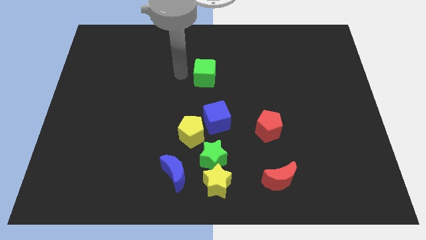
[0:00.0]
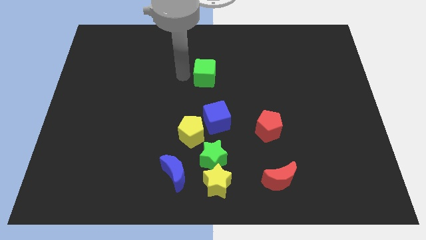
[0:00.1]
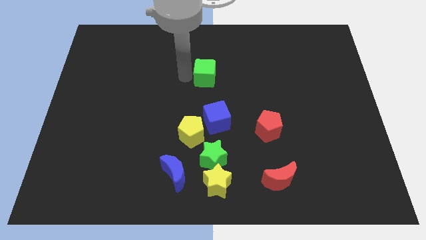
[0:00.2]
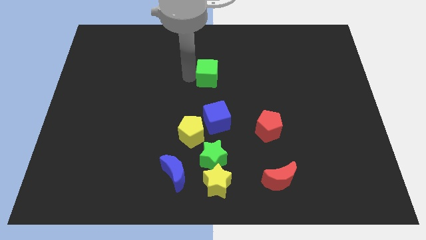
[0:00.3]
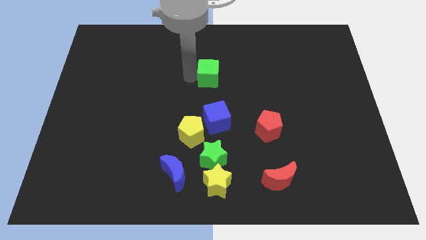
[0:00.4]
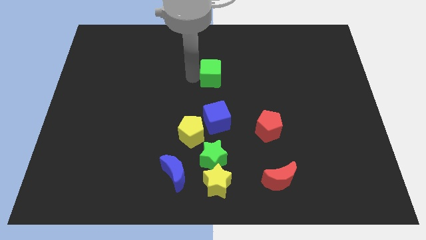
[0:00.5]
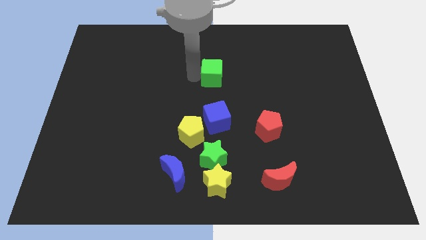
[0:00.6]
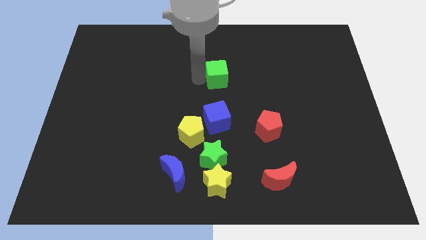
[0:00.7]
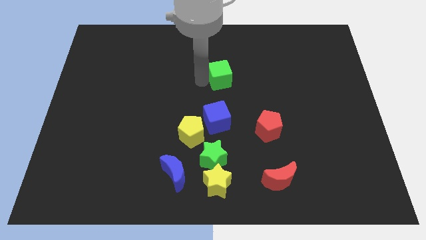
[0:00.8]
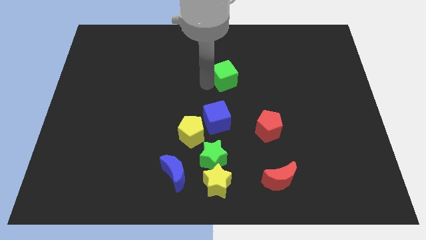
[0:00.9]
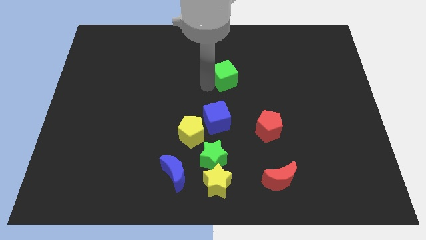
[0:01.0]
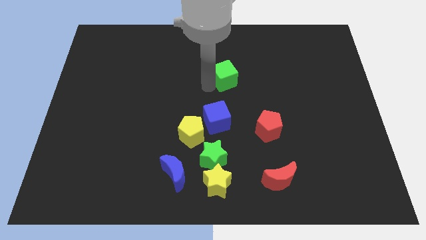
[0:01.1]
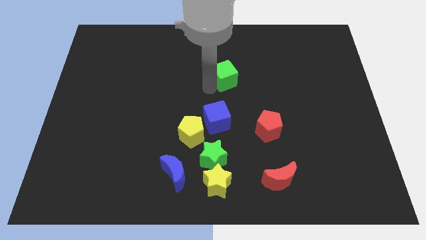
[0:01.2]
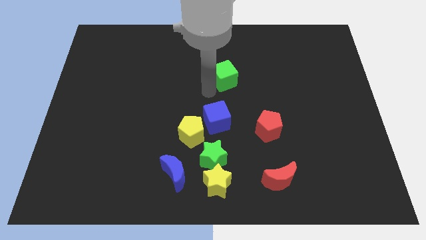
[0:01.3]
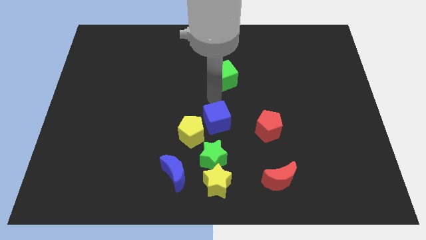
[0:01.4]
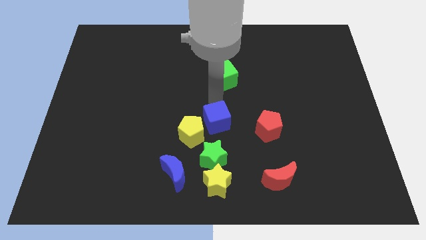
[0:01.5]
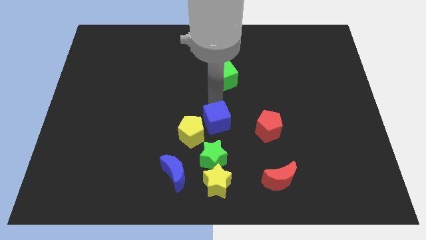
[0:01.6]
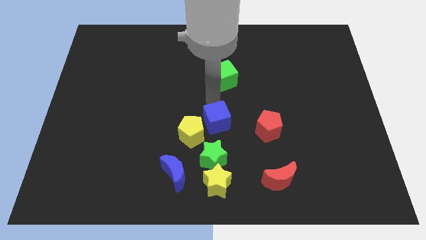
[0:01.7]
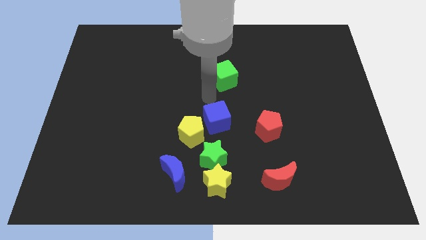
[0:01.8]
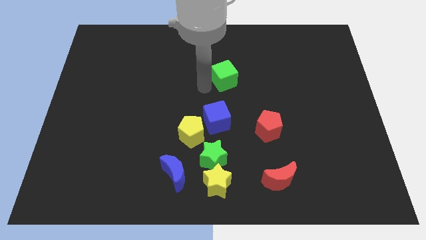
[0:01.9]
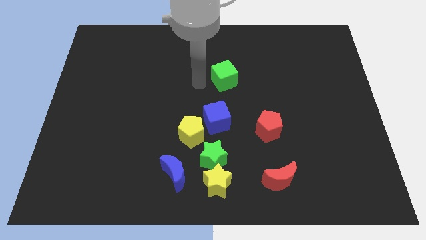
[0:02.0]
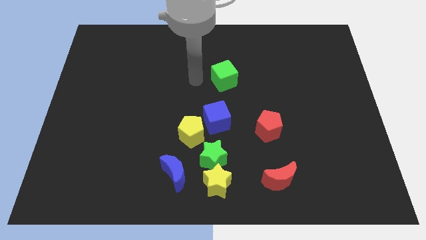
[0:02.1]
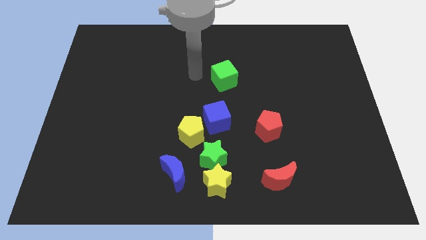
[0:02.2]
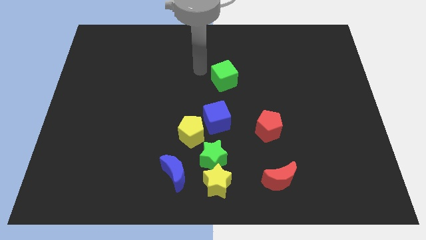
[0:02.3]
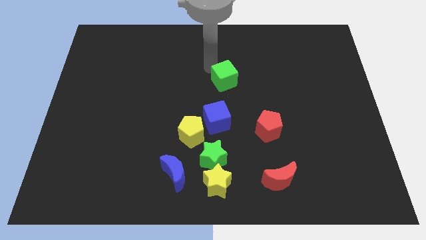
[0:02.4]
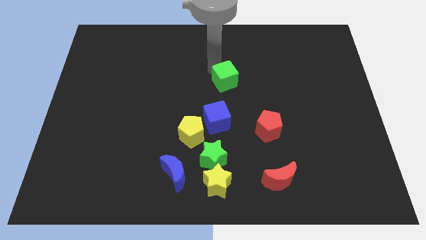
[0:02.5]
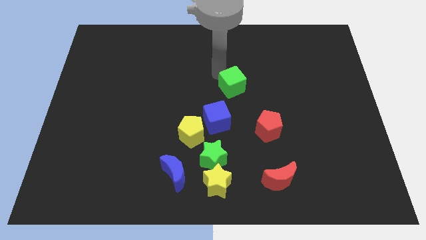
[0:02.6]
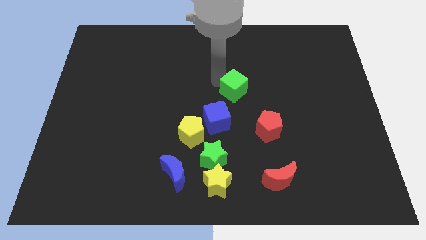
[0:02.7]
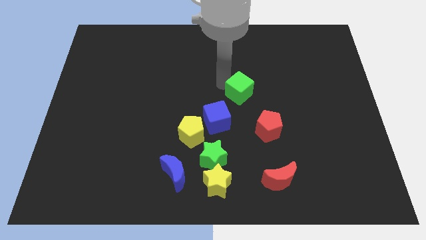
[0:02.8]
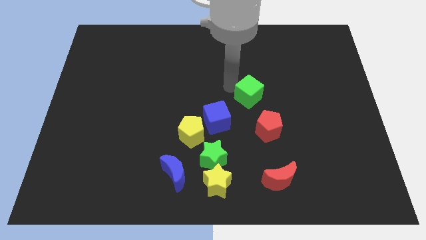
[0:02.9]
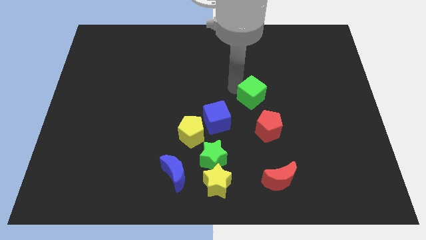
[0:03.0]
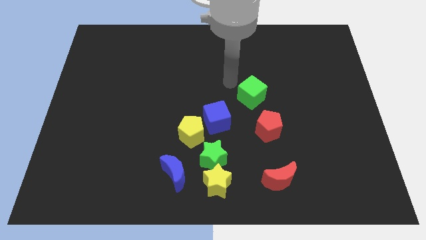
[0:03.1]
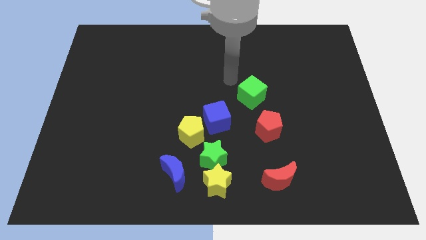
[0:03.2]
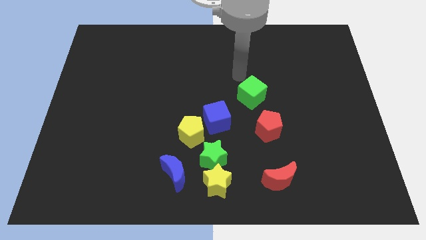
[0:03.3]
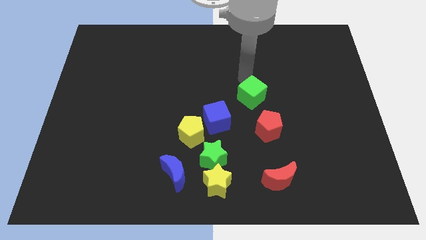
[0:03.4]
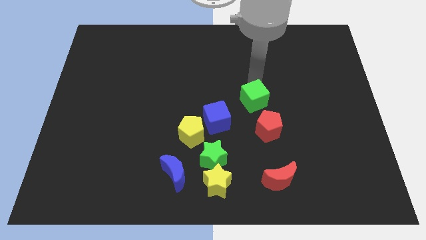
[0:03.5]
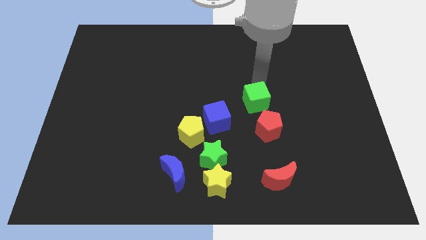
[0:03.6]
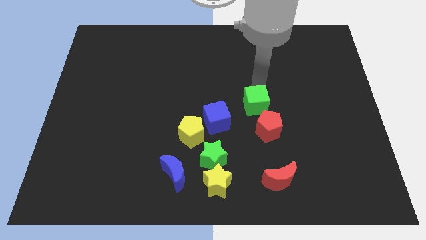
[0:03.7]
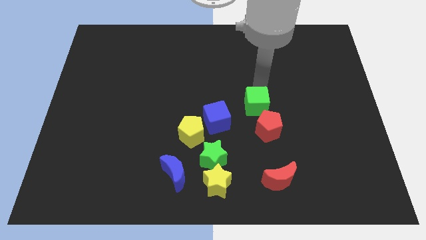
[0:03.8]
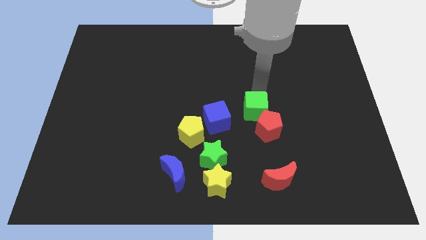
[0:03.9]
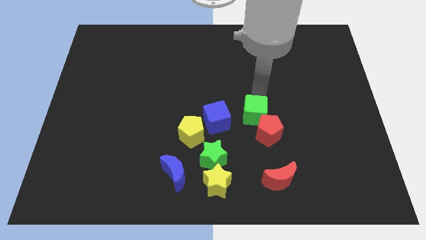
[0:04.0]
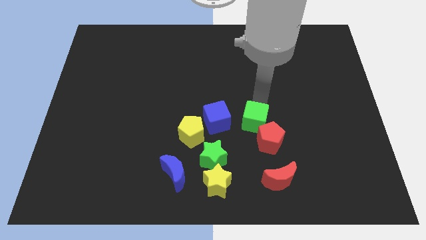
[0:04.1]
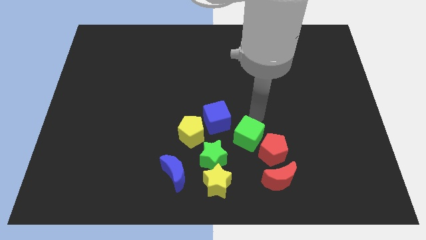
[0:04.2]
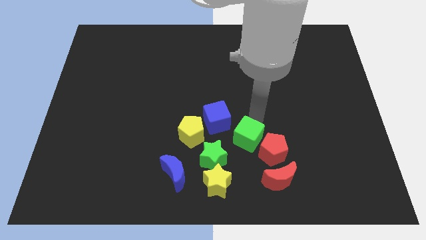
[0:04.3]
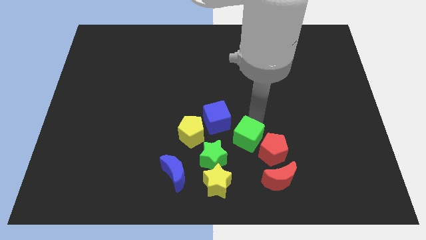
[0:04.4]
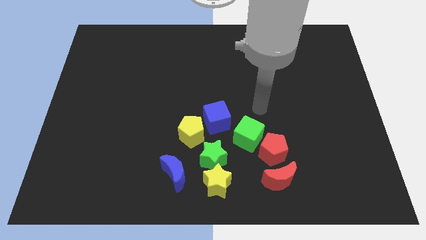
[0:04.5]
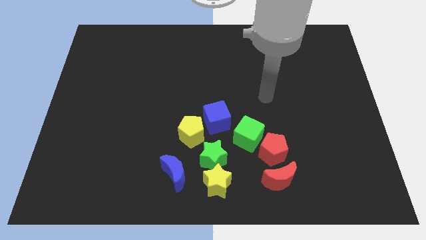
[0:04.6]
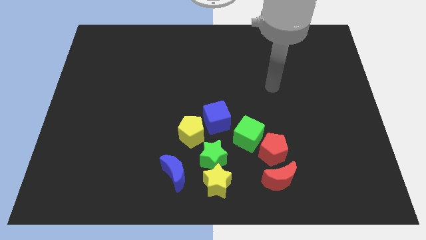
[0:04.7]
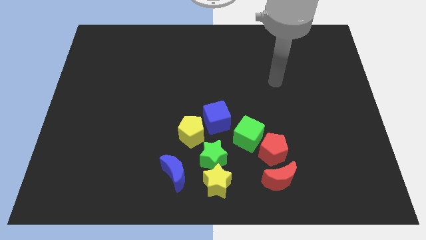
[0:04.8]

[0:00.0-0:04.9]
push the green cube at the bottom right of the blue cube

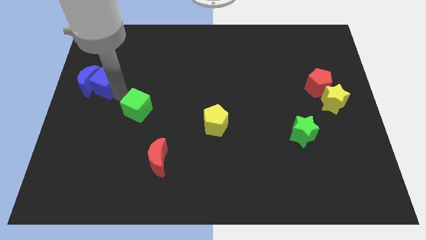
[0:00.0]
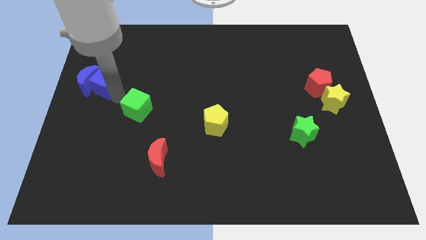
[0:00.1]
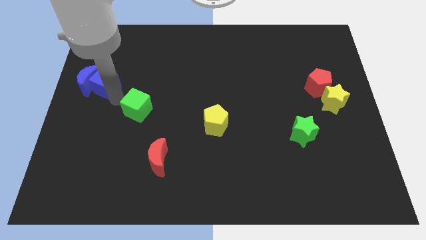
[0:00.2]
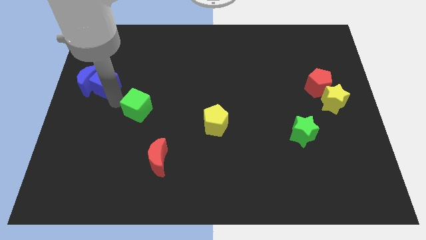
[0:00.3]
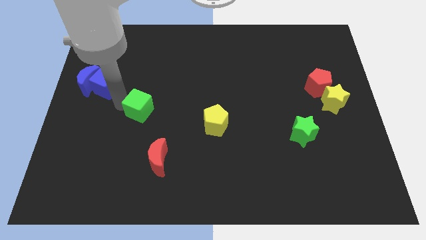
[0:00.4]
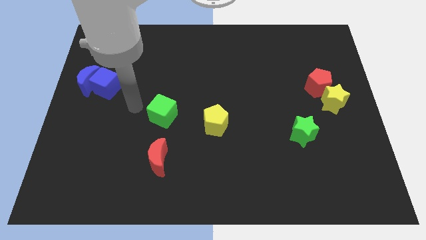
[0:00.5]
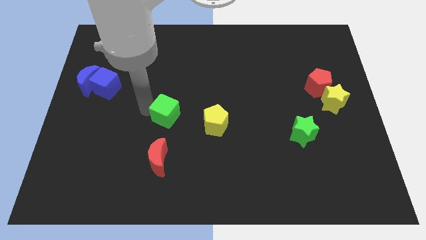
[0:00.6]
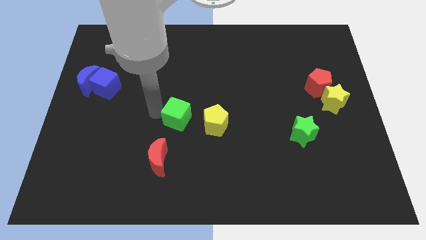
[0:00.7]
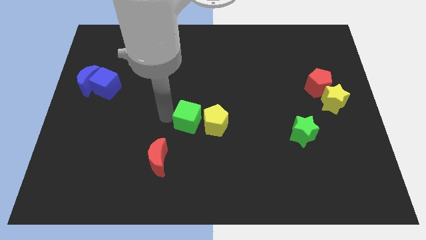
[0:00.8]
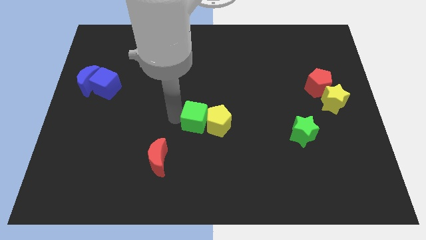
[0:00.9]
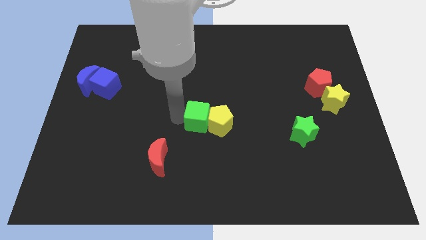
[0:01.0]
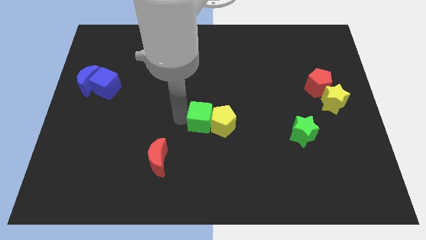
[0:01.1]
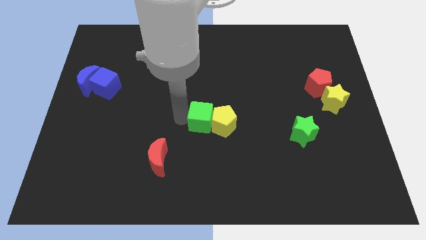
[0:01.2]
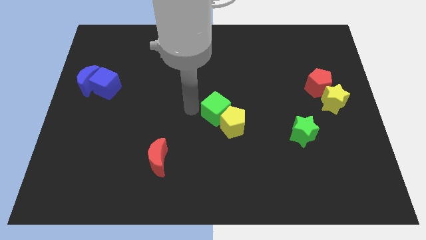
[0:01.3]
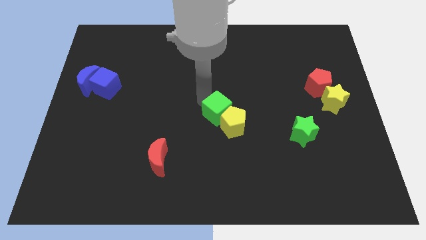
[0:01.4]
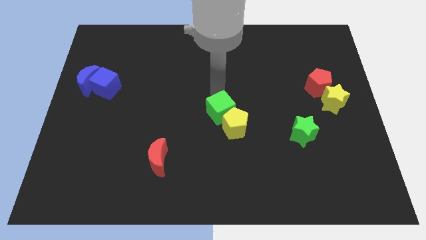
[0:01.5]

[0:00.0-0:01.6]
push the green cube into yellow pentagon

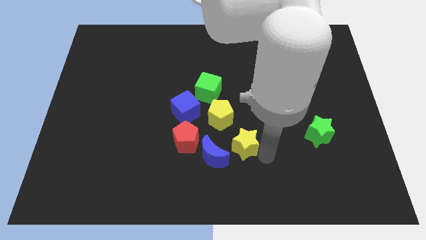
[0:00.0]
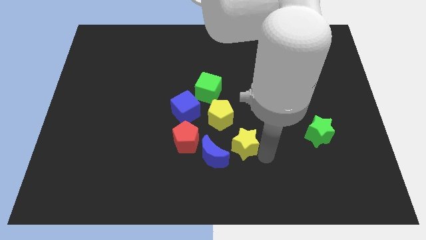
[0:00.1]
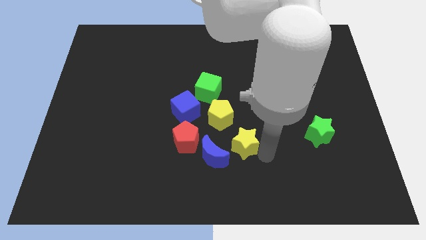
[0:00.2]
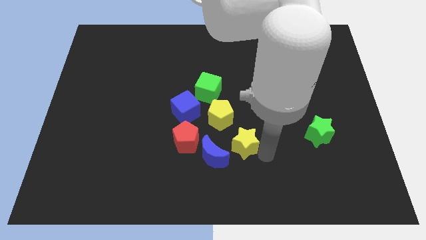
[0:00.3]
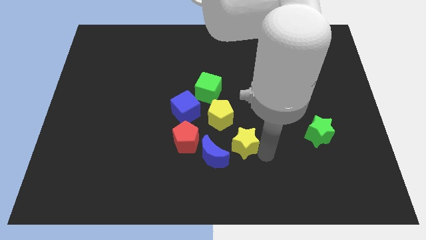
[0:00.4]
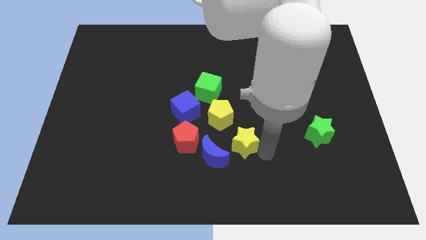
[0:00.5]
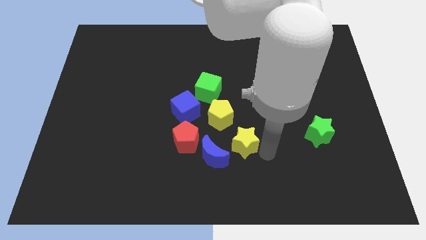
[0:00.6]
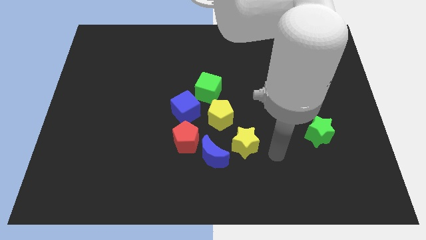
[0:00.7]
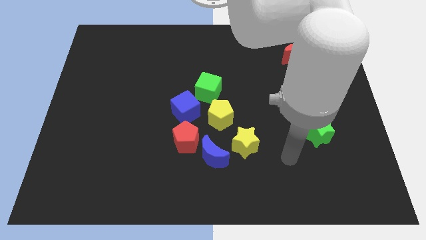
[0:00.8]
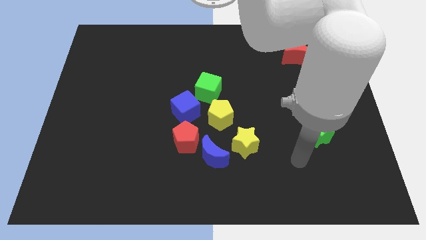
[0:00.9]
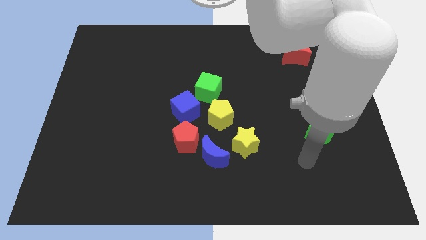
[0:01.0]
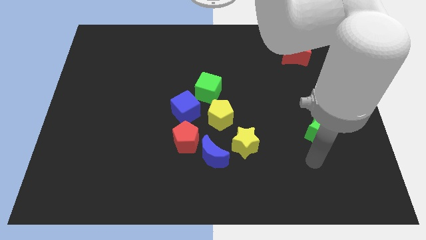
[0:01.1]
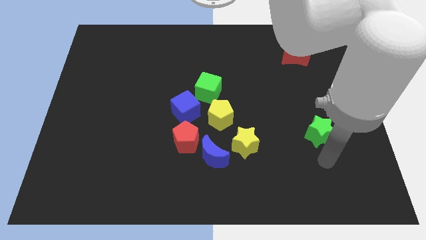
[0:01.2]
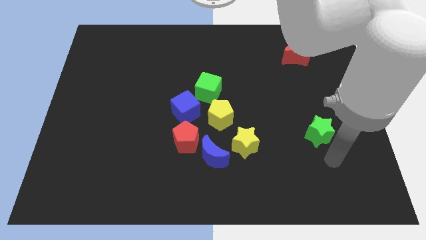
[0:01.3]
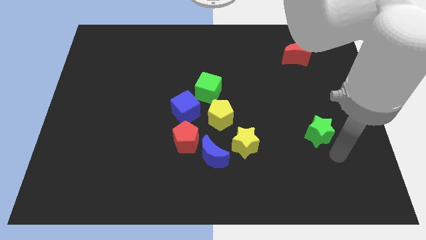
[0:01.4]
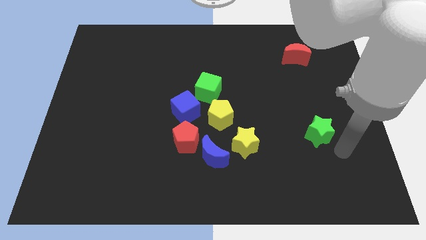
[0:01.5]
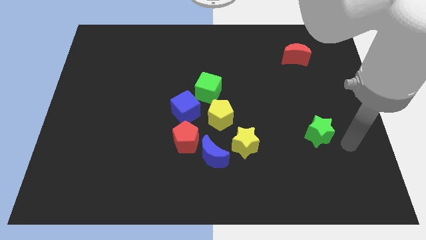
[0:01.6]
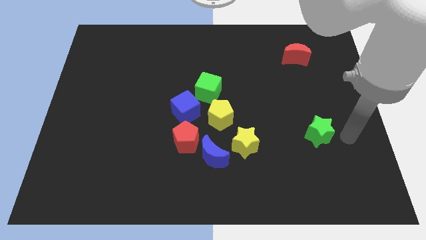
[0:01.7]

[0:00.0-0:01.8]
move yourself away from the yellow star

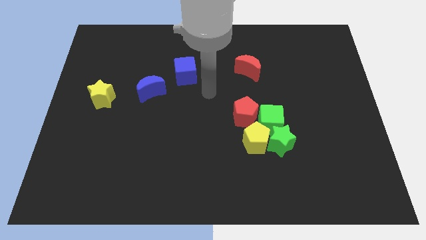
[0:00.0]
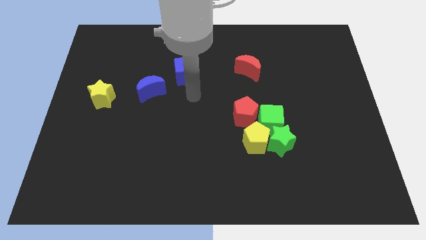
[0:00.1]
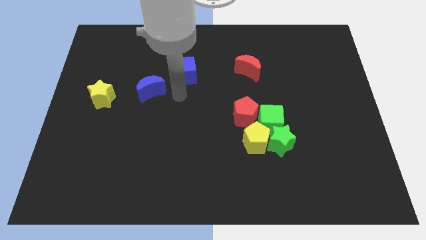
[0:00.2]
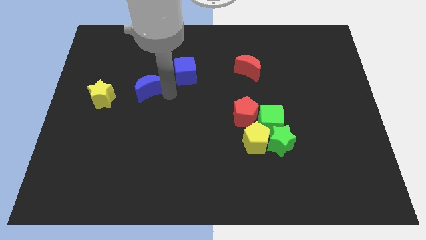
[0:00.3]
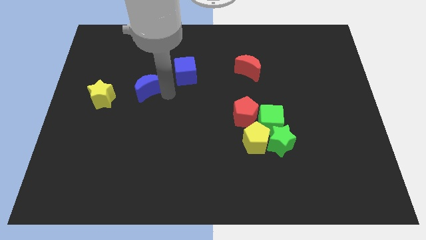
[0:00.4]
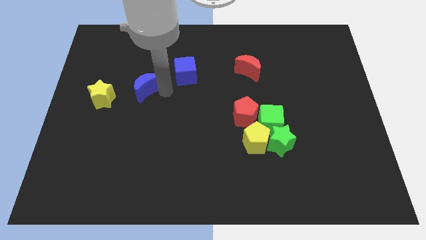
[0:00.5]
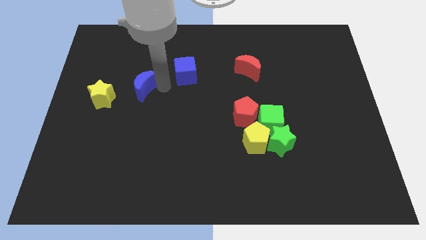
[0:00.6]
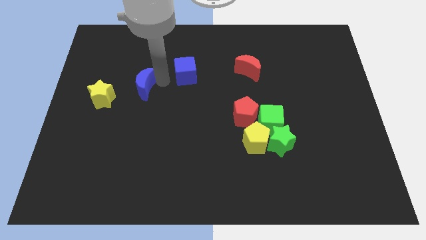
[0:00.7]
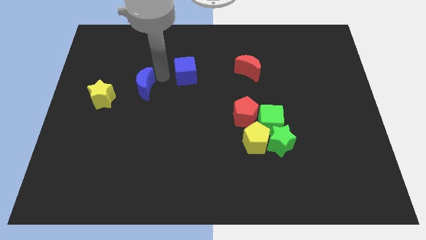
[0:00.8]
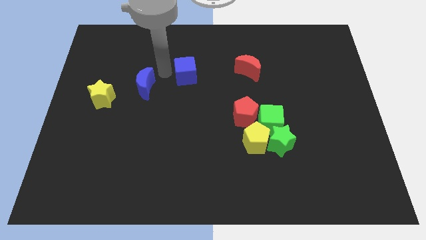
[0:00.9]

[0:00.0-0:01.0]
place the blue moon in between the blue cube and yellow star
